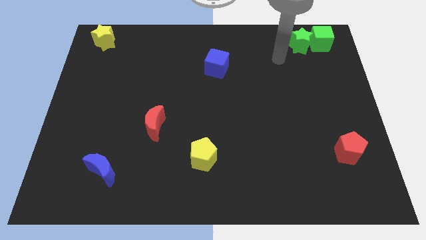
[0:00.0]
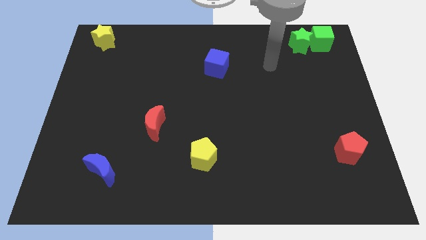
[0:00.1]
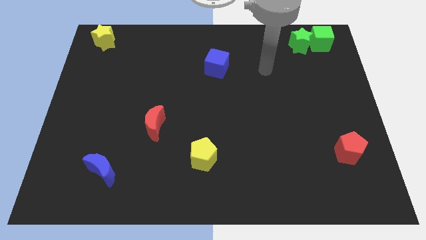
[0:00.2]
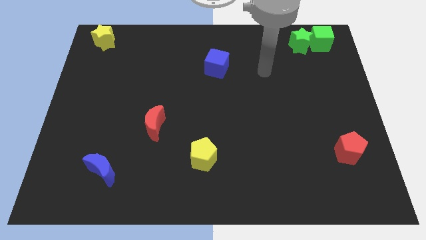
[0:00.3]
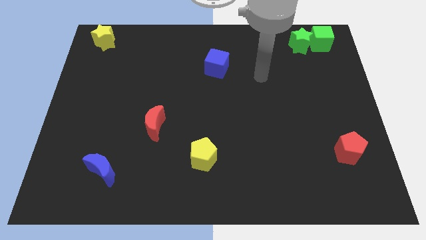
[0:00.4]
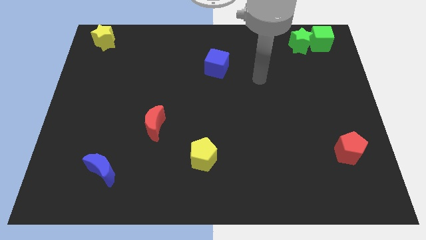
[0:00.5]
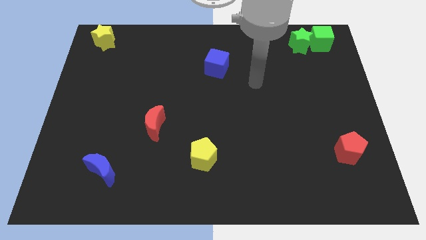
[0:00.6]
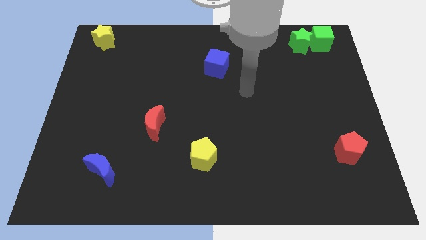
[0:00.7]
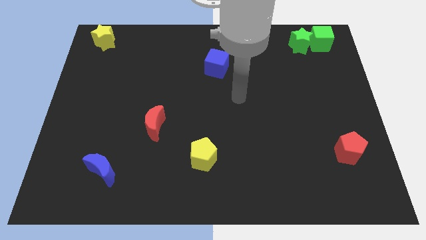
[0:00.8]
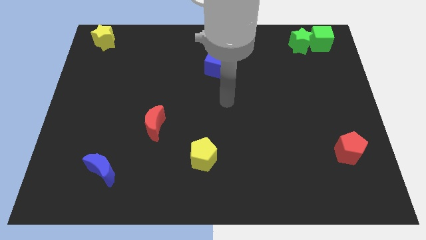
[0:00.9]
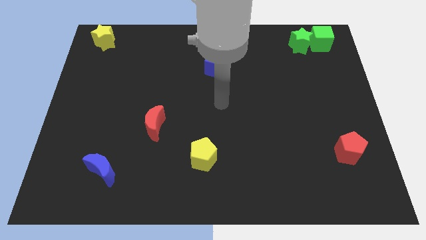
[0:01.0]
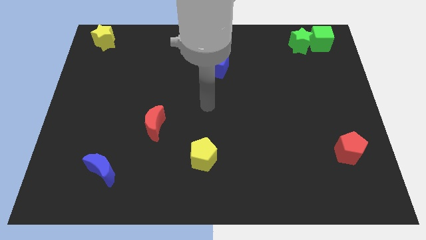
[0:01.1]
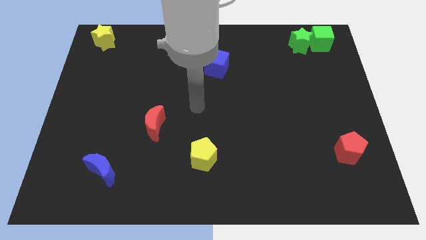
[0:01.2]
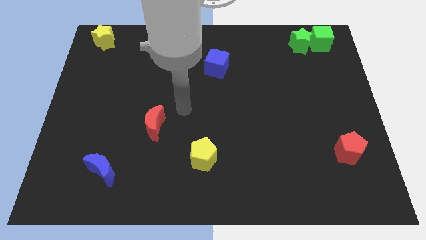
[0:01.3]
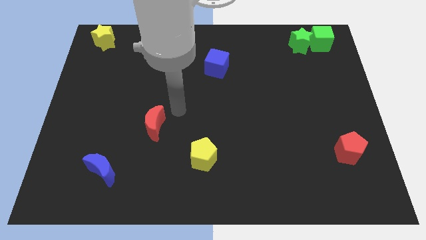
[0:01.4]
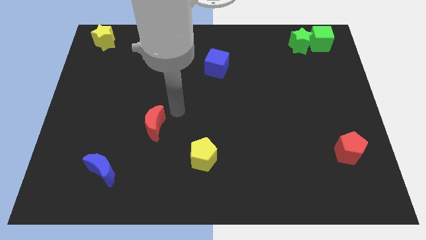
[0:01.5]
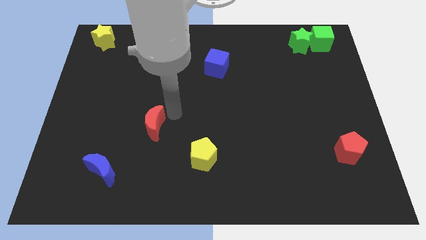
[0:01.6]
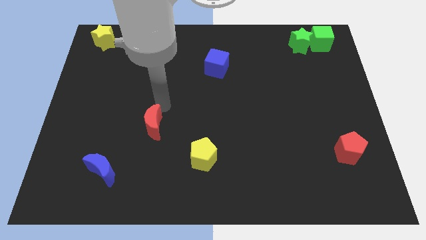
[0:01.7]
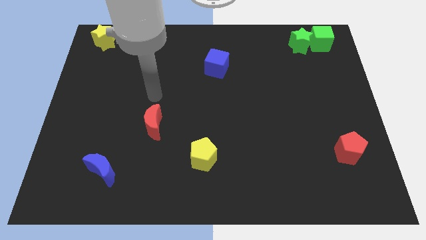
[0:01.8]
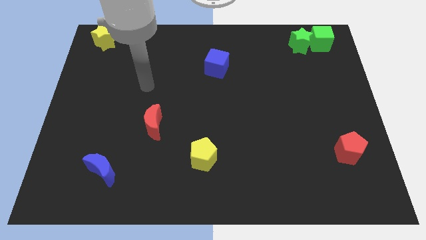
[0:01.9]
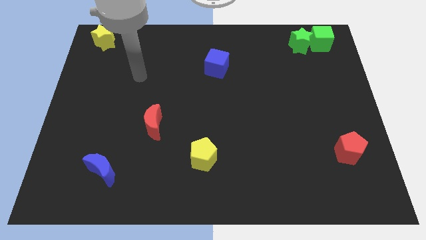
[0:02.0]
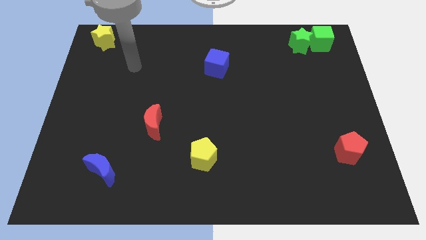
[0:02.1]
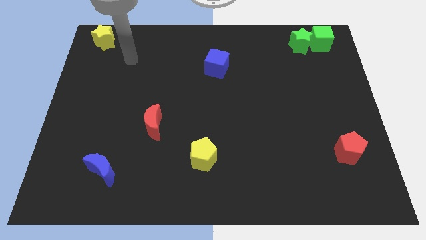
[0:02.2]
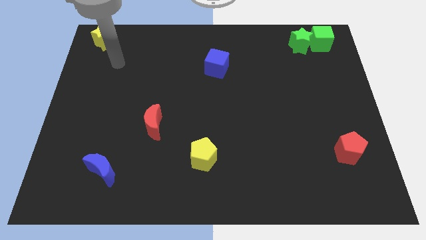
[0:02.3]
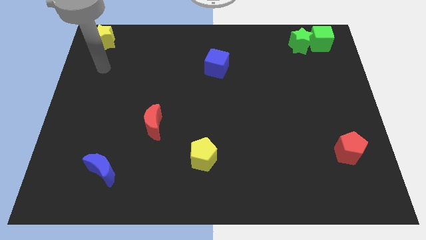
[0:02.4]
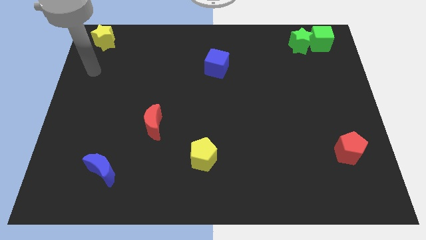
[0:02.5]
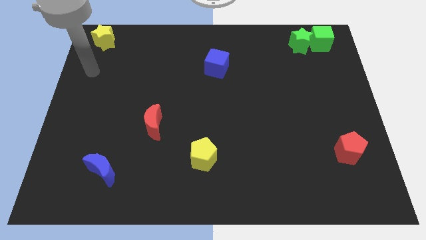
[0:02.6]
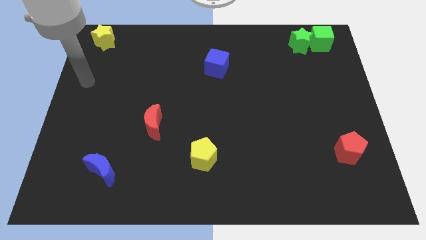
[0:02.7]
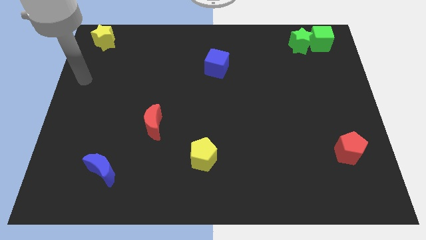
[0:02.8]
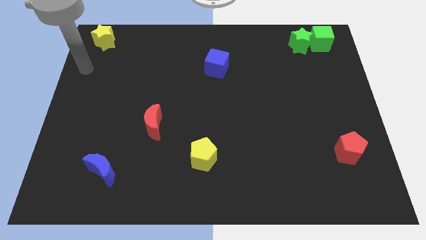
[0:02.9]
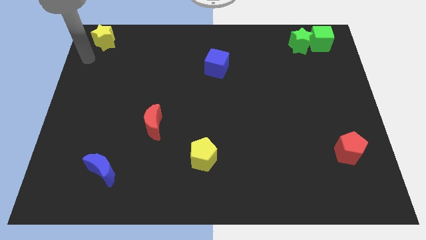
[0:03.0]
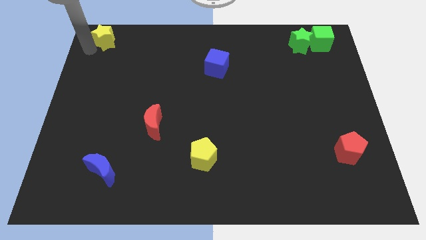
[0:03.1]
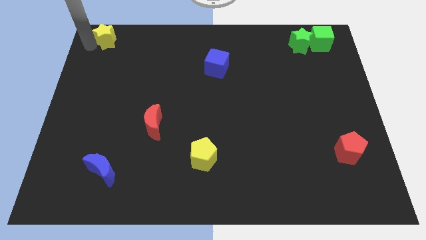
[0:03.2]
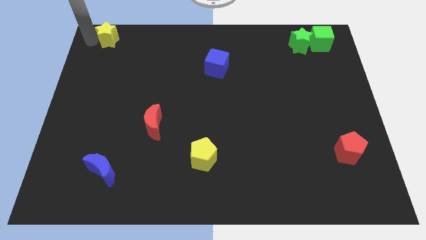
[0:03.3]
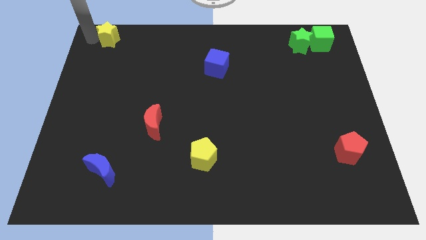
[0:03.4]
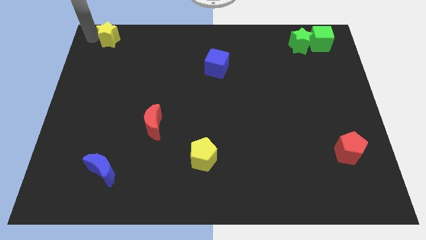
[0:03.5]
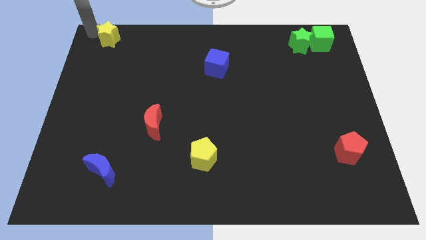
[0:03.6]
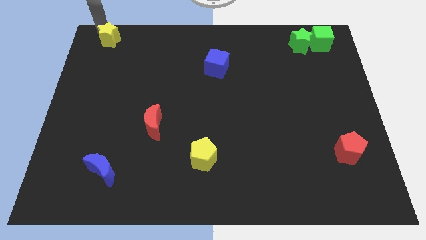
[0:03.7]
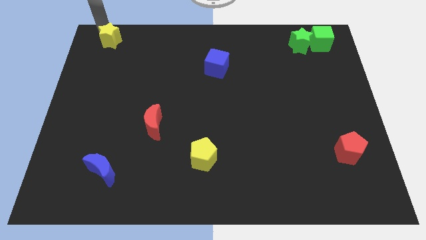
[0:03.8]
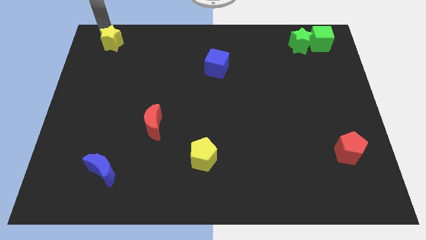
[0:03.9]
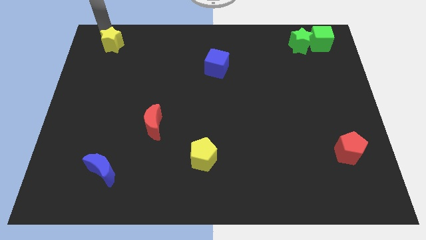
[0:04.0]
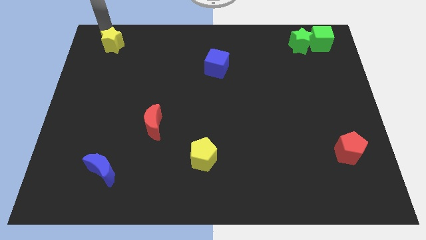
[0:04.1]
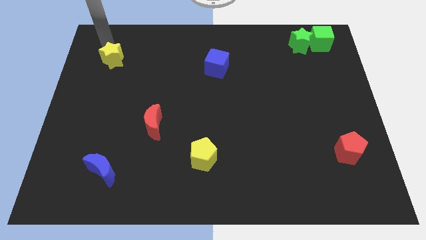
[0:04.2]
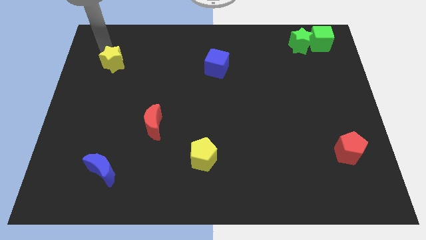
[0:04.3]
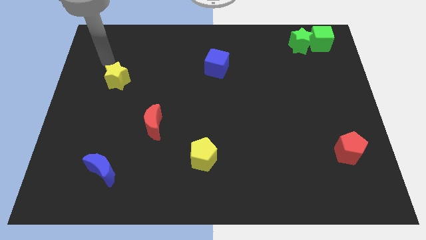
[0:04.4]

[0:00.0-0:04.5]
push the yellow star slightly downwards

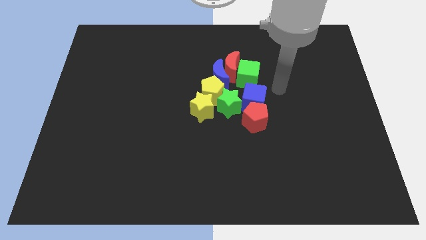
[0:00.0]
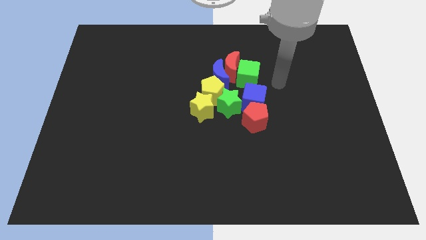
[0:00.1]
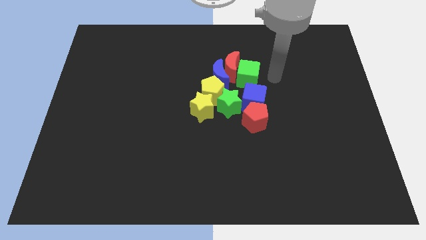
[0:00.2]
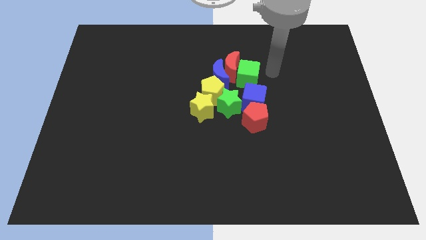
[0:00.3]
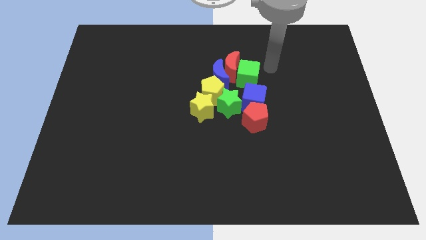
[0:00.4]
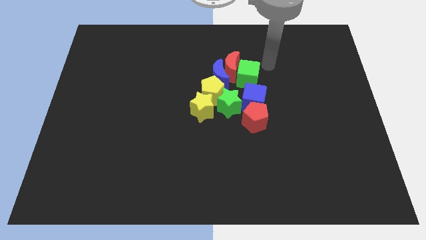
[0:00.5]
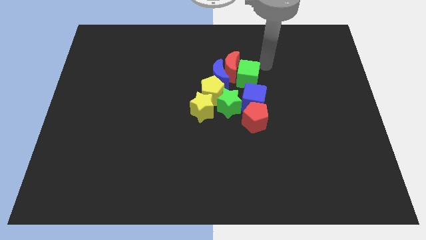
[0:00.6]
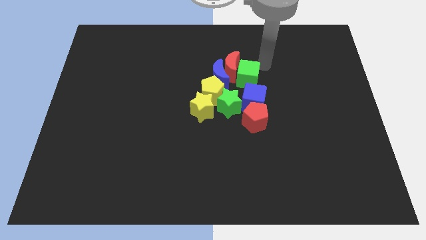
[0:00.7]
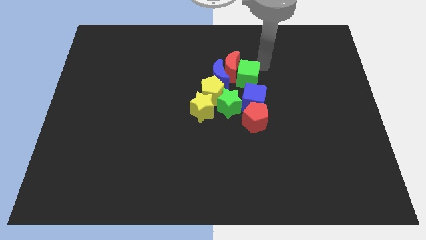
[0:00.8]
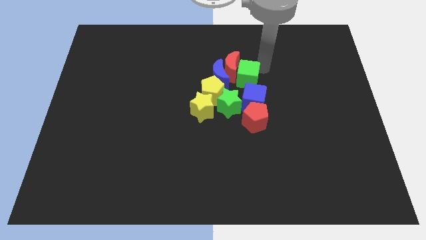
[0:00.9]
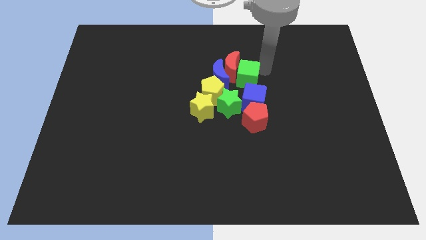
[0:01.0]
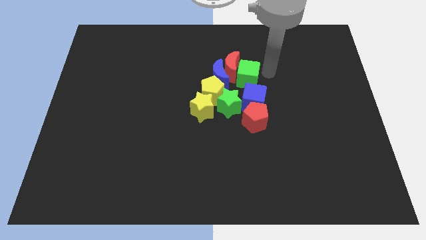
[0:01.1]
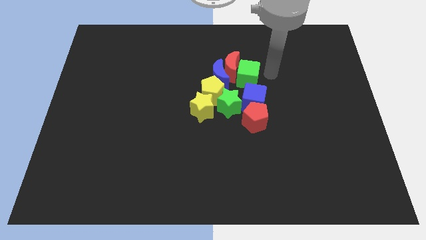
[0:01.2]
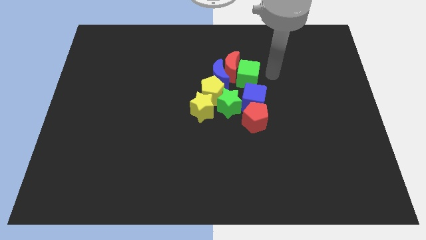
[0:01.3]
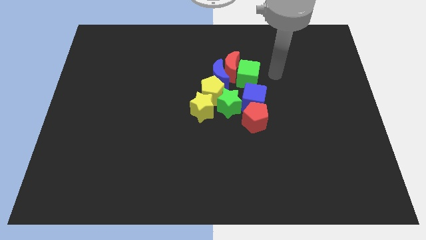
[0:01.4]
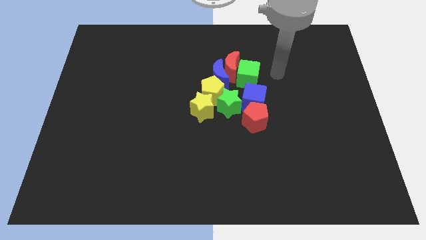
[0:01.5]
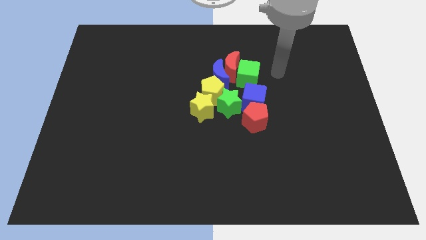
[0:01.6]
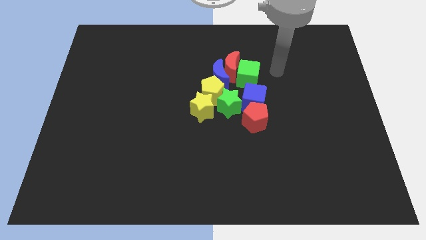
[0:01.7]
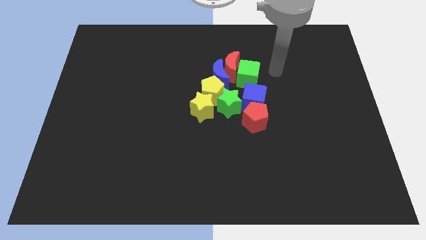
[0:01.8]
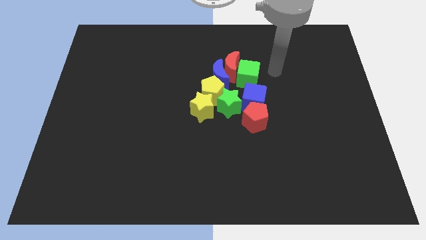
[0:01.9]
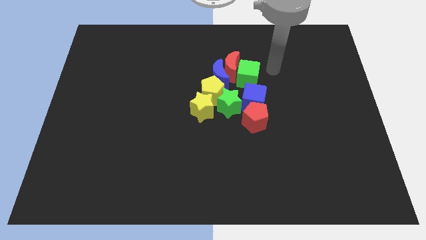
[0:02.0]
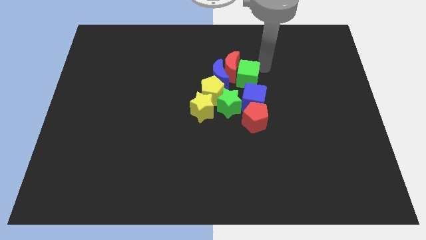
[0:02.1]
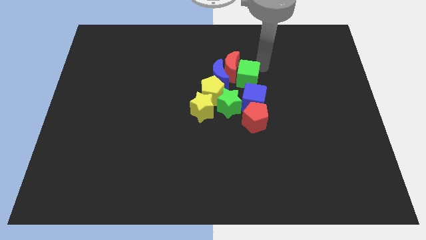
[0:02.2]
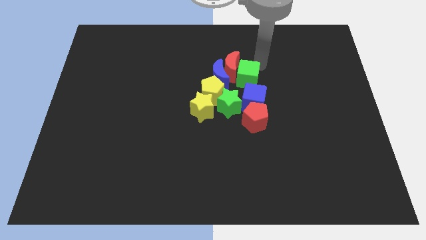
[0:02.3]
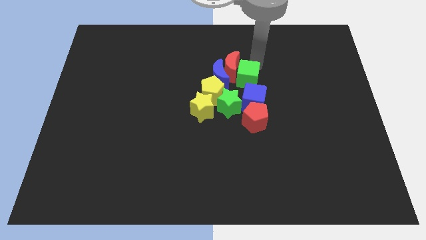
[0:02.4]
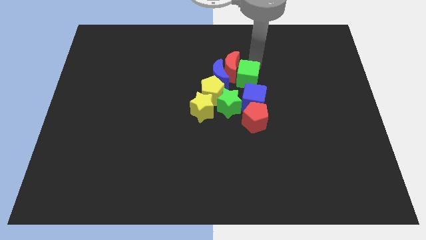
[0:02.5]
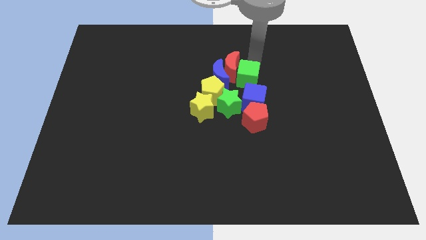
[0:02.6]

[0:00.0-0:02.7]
place the arm above the green cube

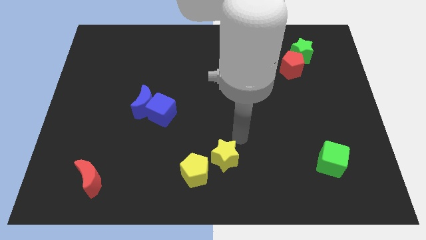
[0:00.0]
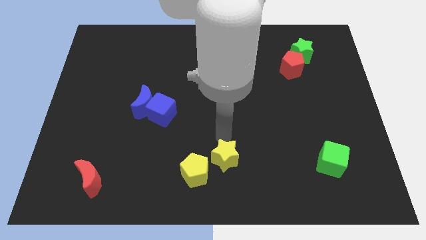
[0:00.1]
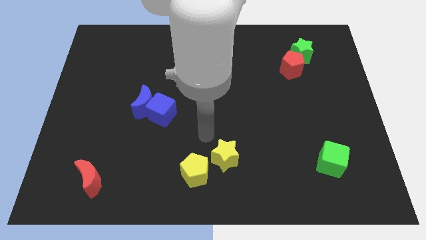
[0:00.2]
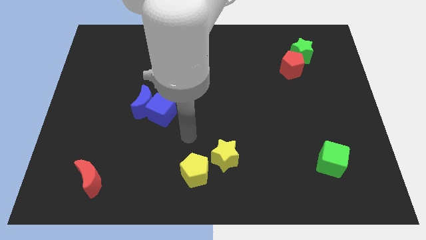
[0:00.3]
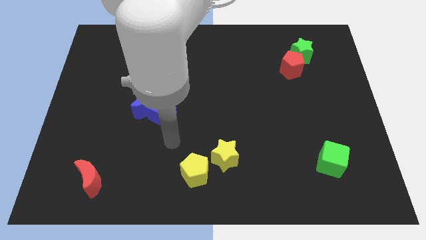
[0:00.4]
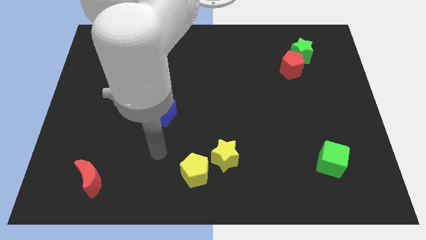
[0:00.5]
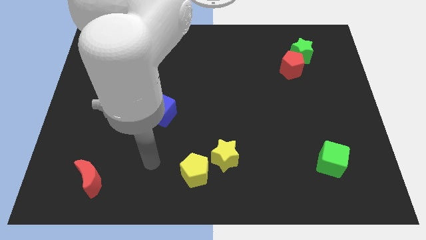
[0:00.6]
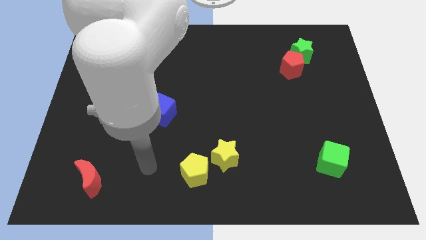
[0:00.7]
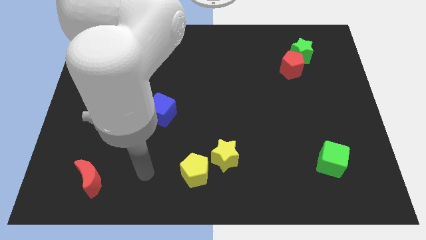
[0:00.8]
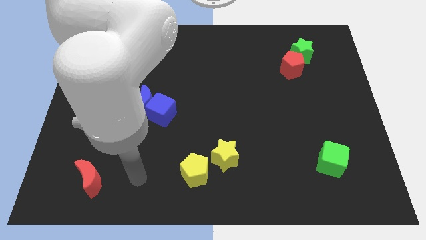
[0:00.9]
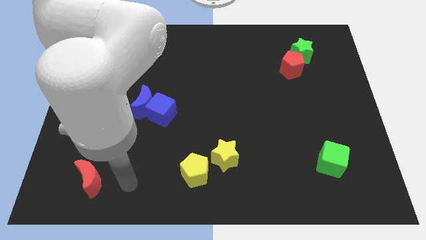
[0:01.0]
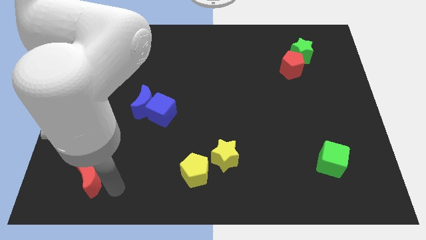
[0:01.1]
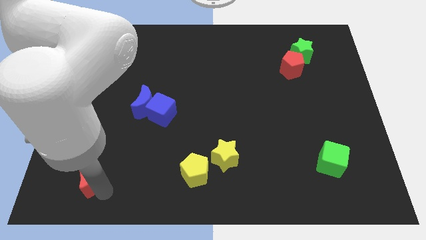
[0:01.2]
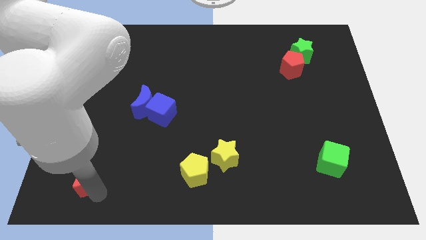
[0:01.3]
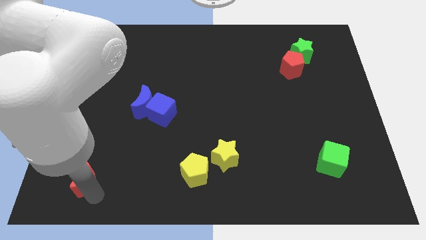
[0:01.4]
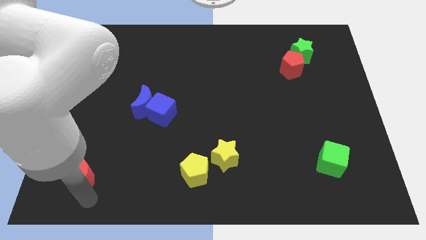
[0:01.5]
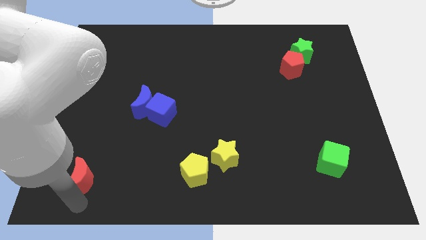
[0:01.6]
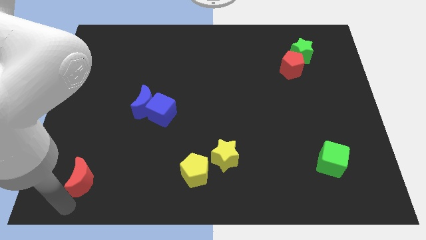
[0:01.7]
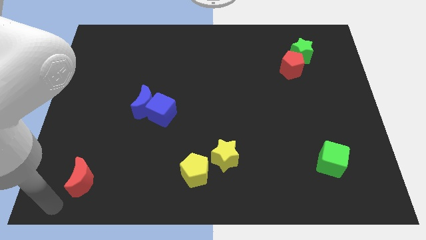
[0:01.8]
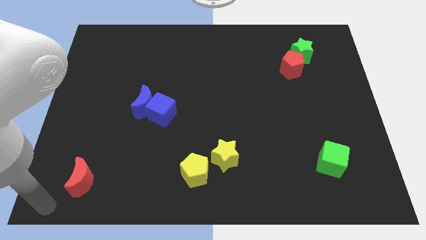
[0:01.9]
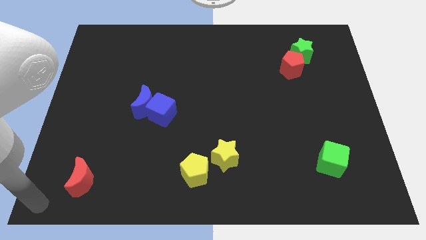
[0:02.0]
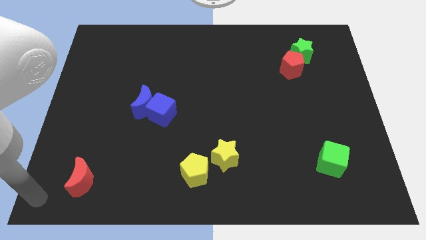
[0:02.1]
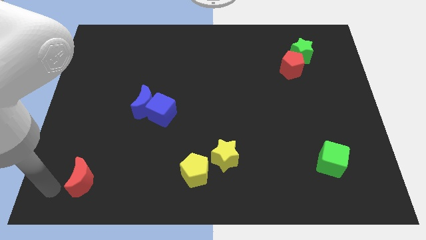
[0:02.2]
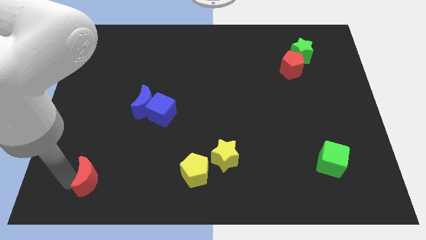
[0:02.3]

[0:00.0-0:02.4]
slightly touch red moon
